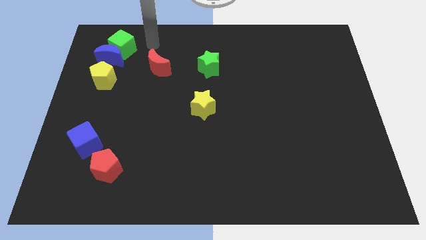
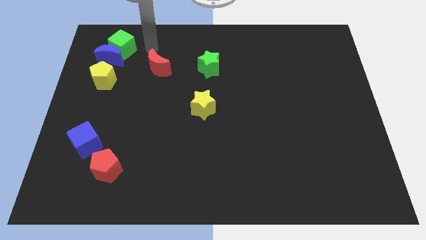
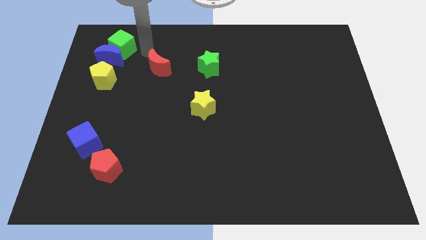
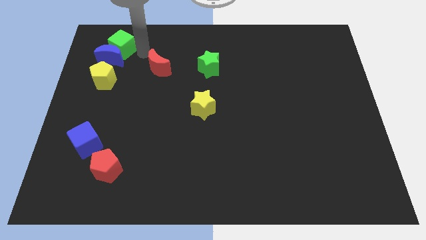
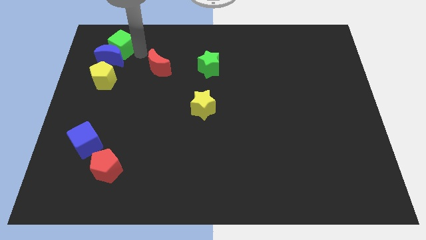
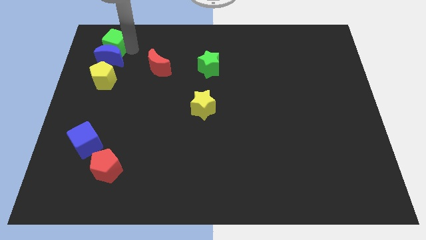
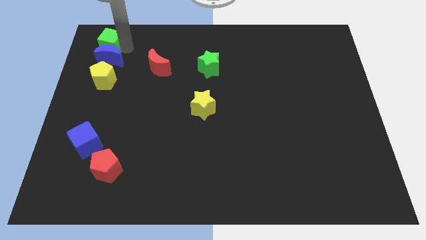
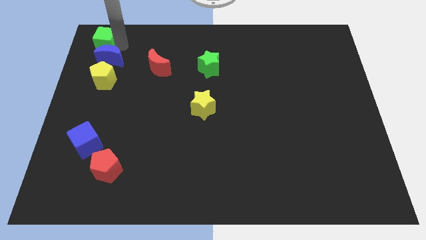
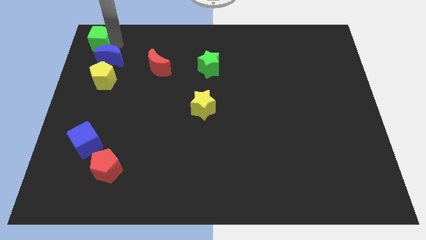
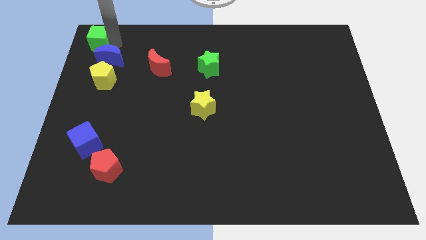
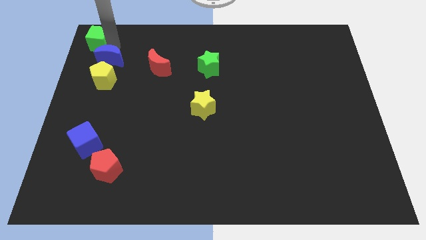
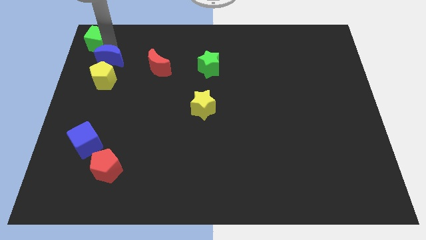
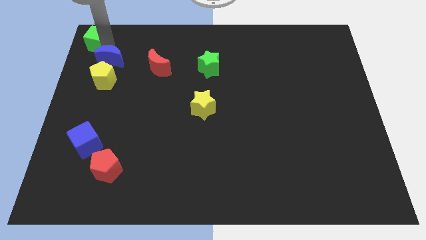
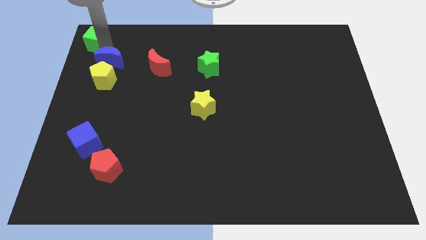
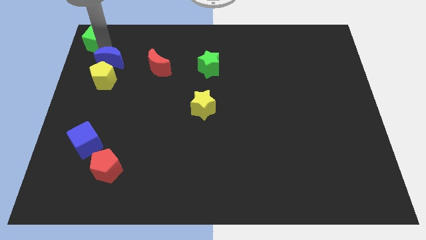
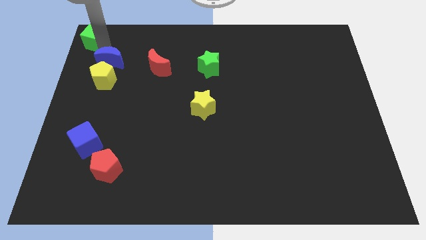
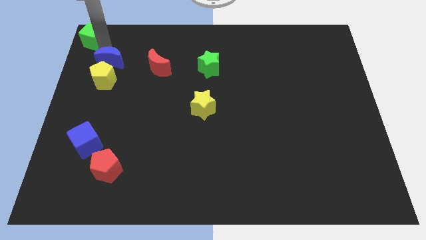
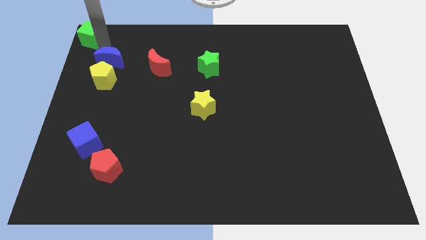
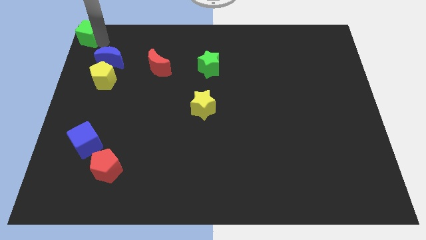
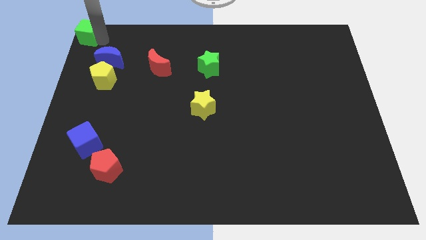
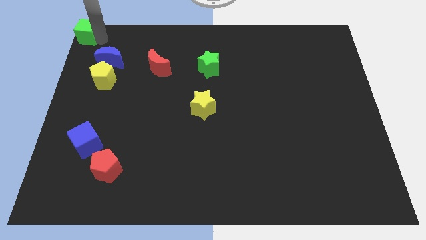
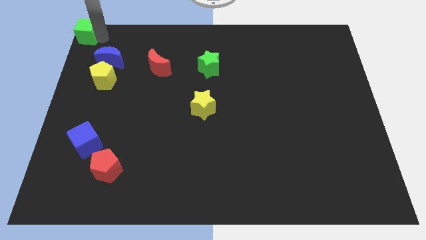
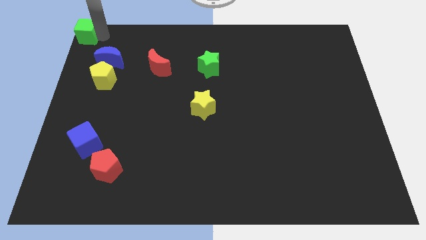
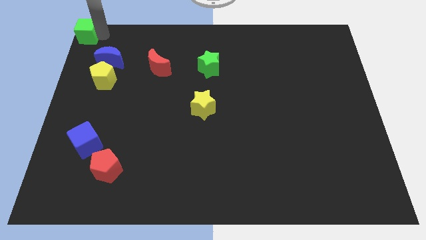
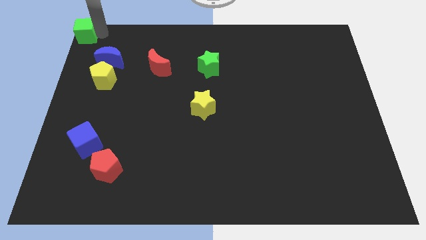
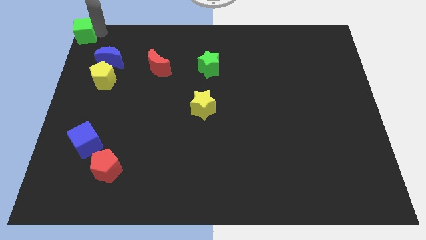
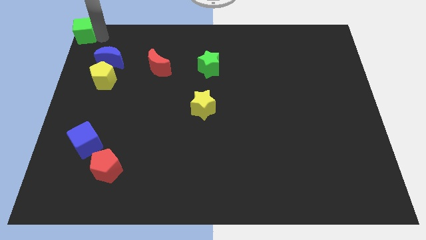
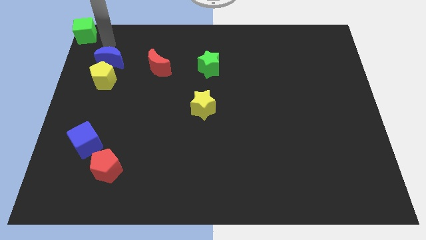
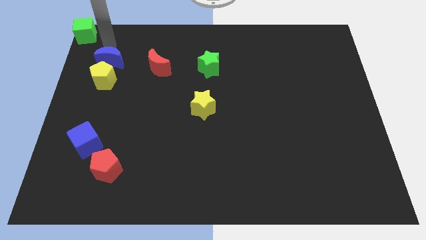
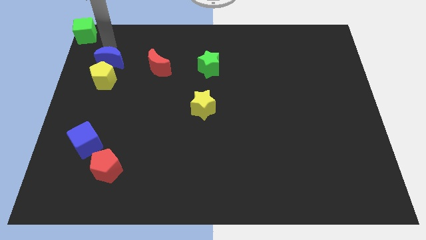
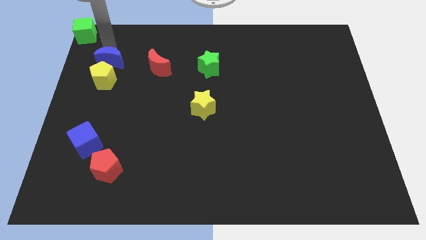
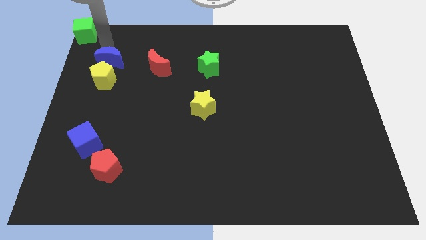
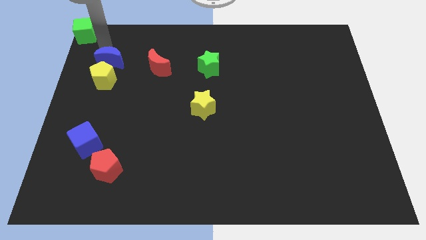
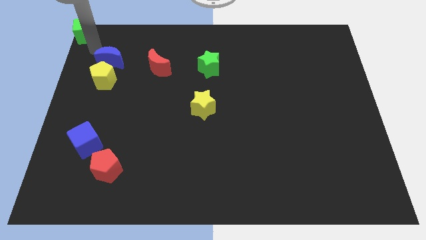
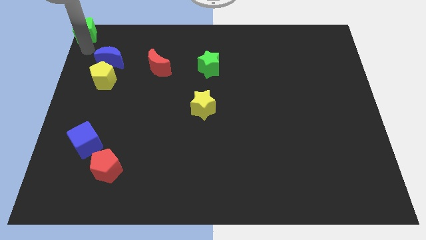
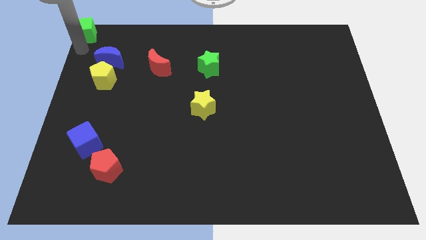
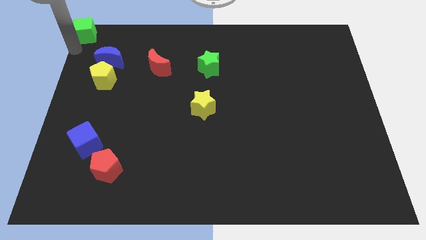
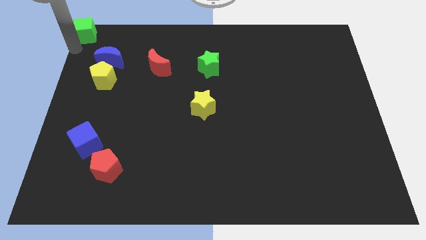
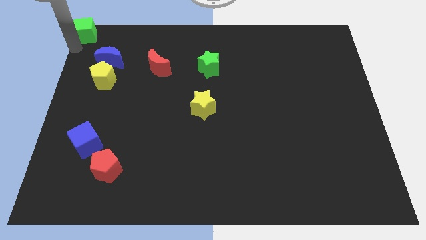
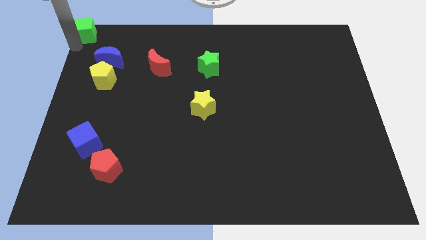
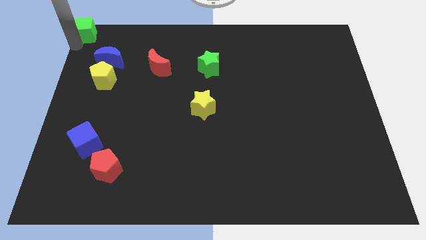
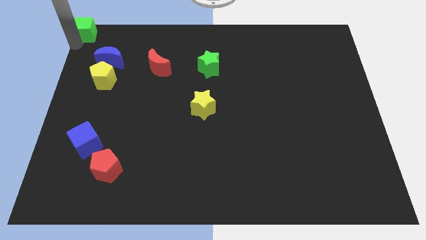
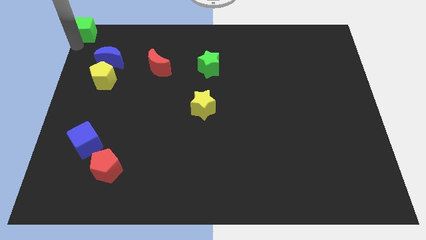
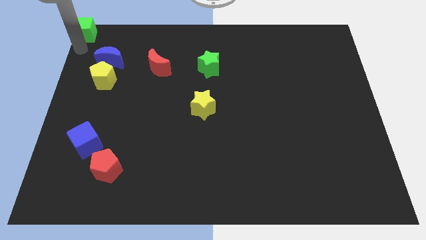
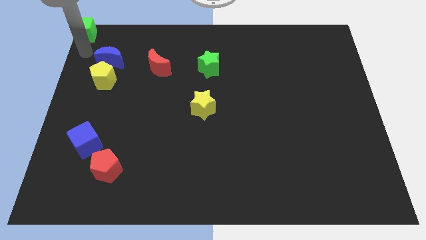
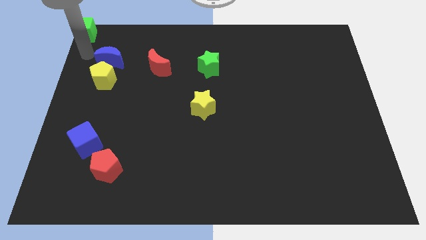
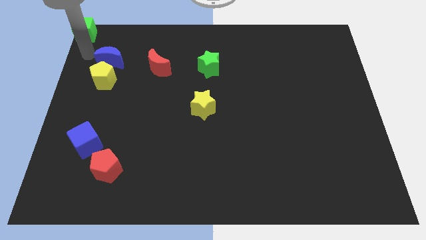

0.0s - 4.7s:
move the green block to the top left corner of the board

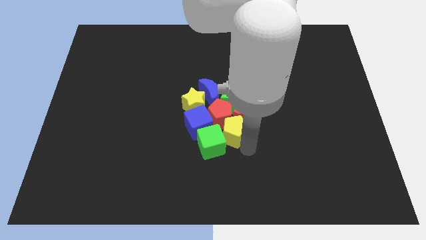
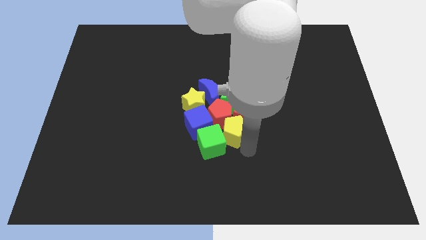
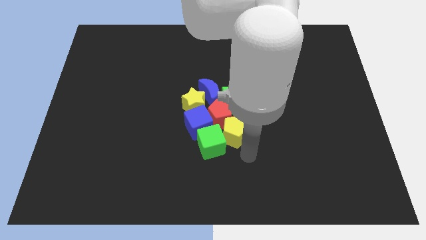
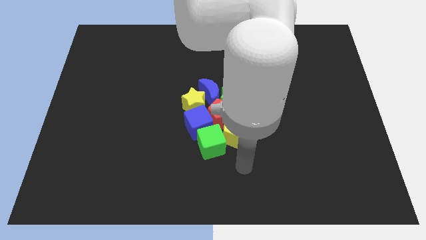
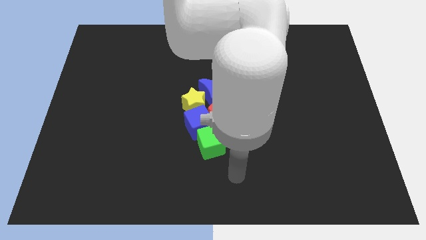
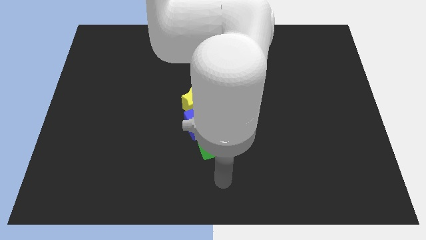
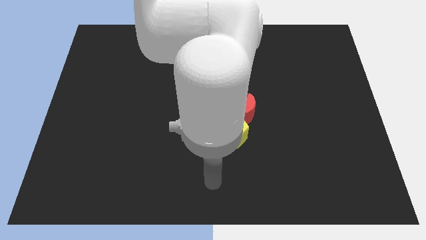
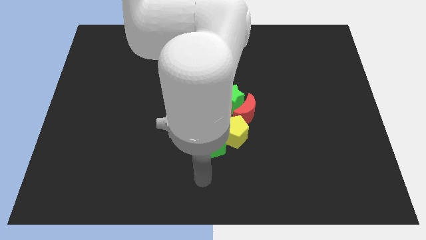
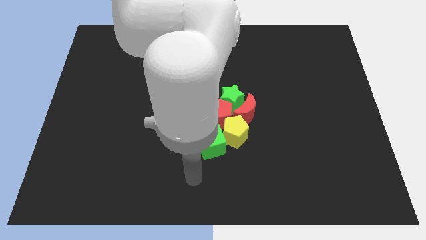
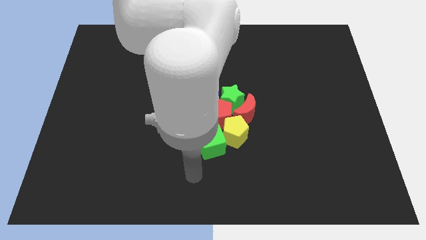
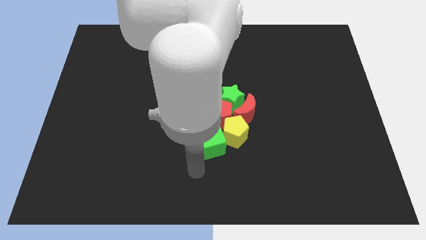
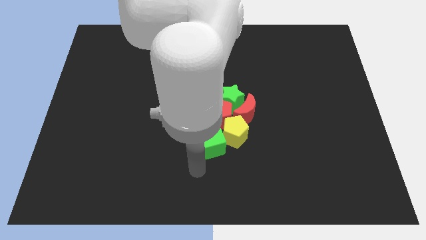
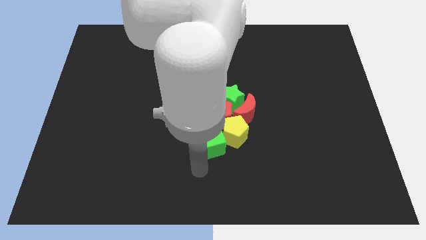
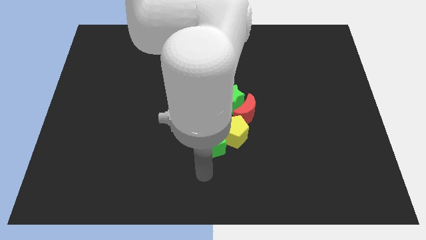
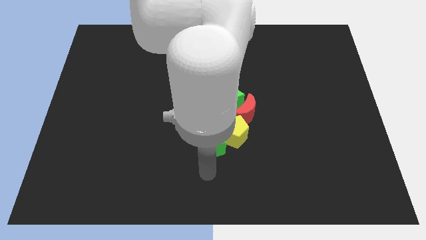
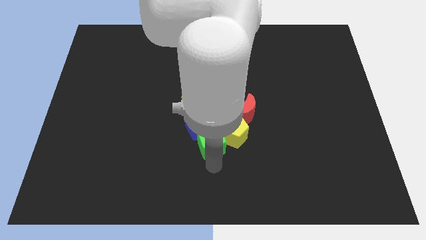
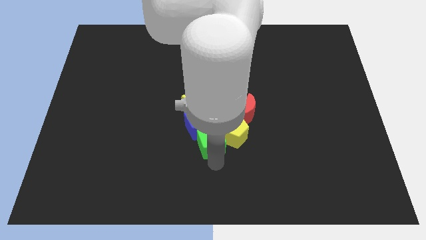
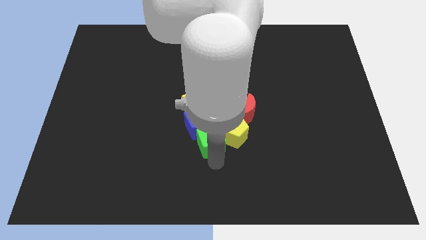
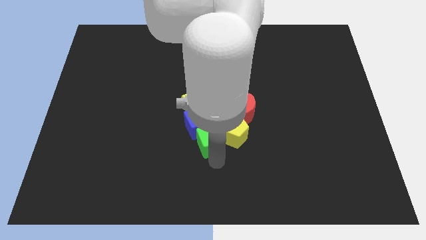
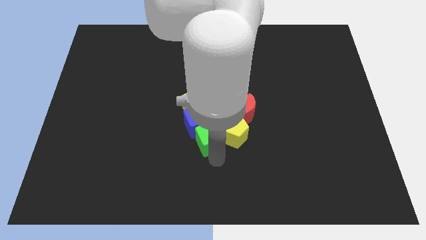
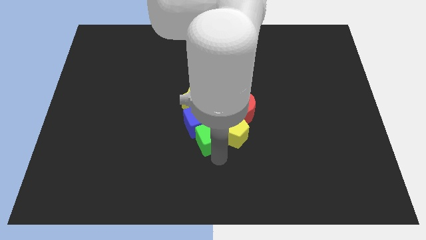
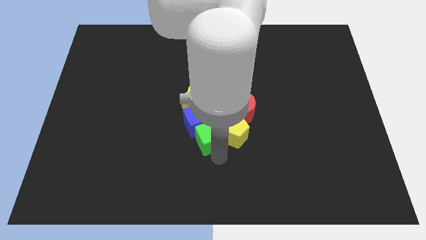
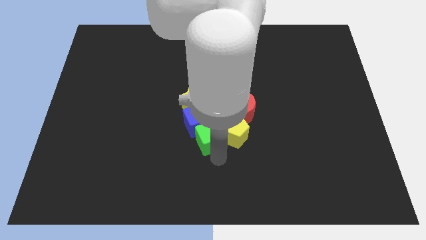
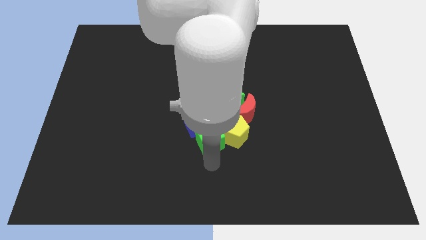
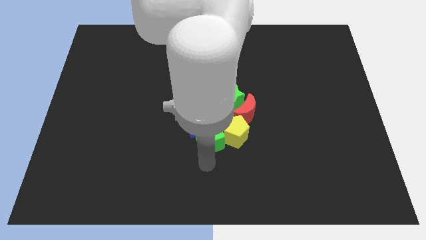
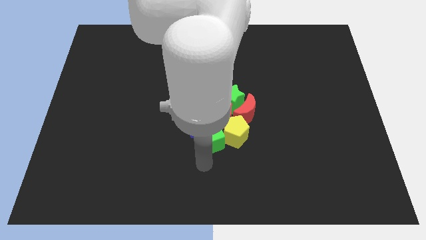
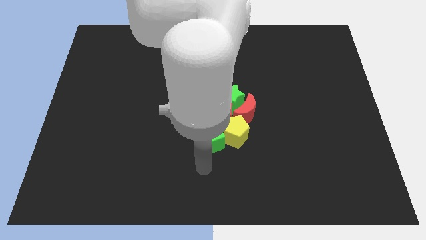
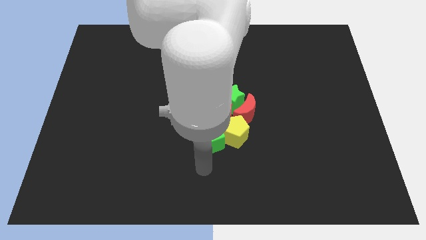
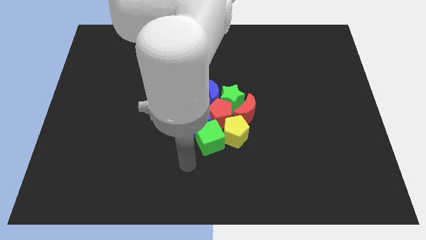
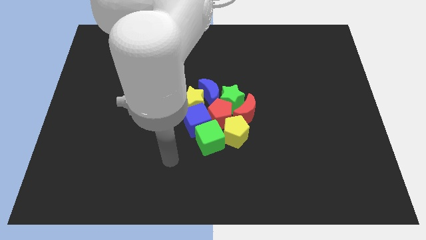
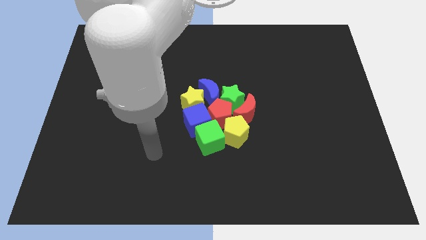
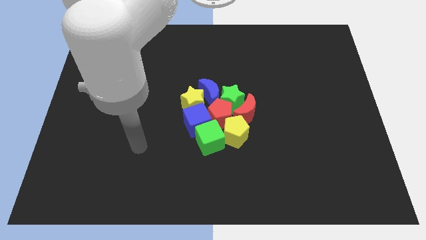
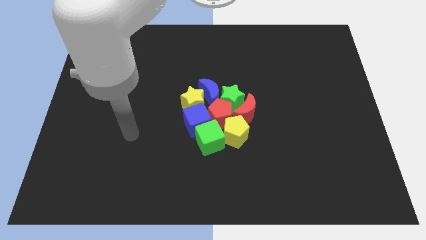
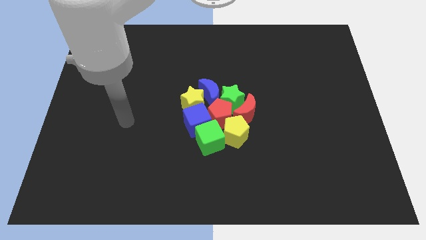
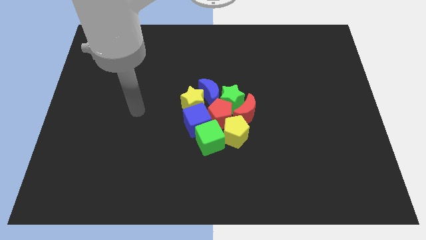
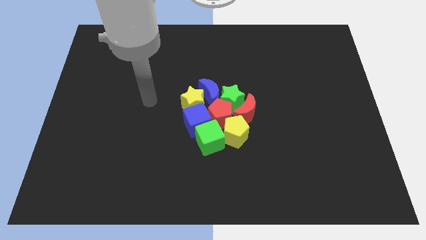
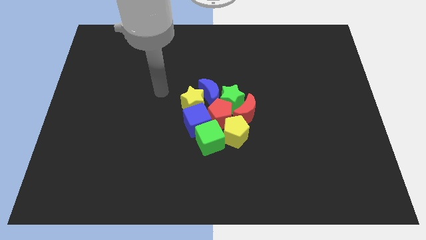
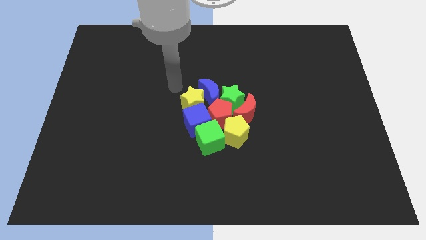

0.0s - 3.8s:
slide the yellow pentagon and green cube towards the top of the board

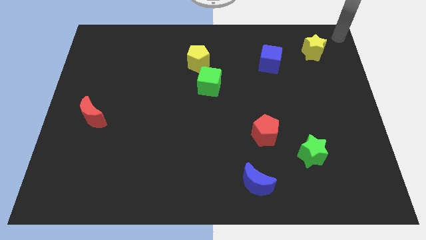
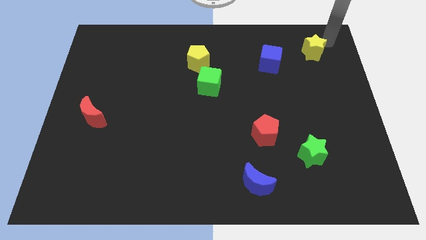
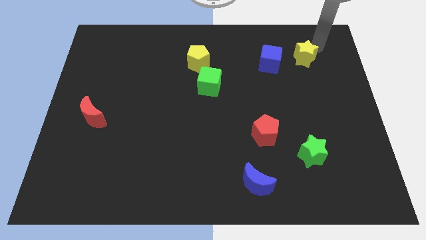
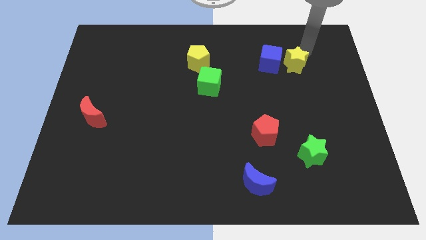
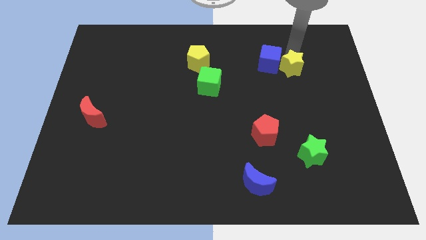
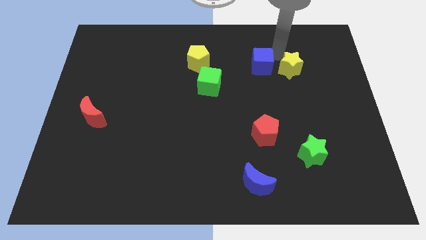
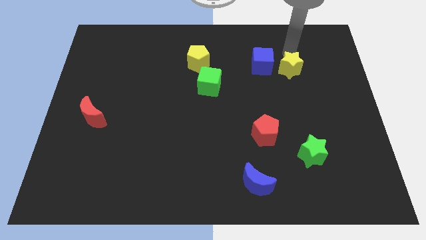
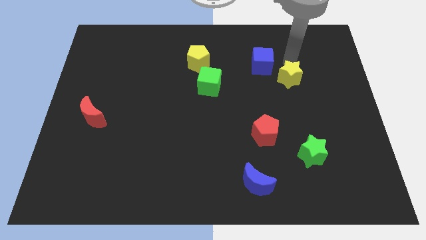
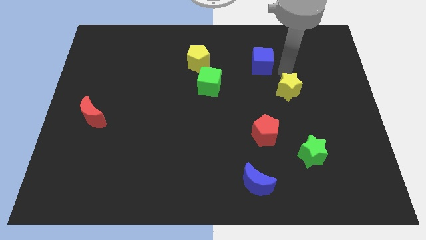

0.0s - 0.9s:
place the yellow star to the horizontal right side of the green cube
